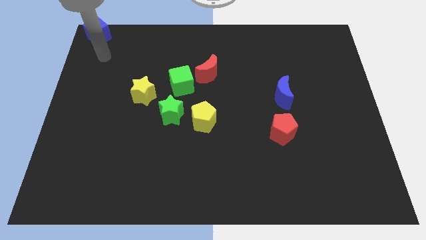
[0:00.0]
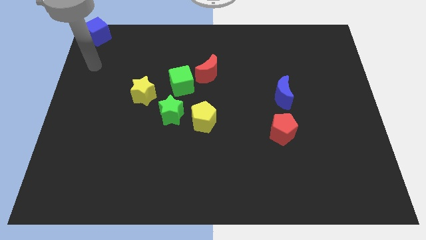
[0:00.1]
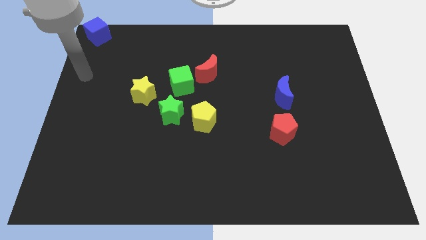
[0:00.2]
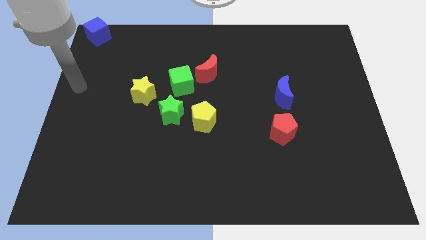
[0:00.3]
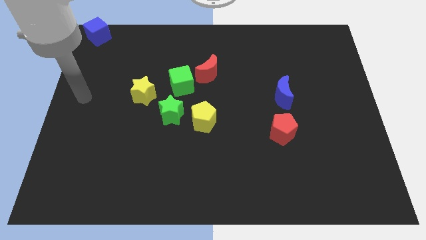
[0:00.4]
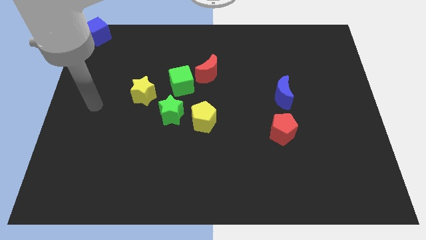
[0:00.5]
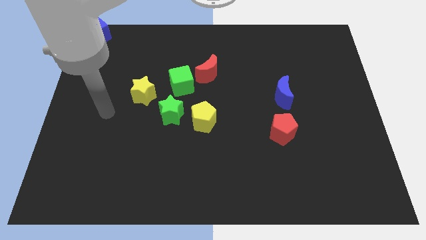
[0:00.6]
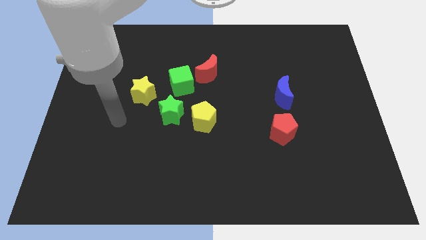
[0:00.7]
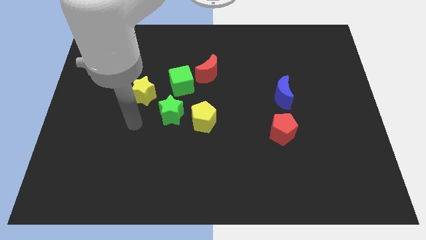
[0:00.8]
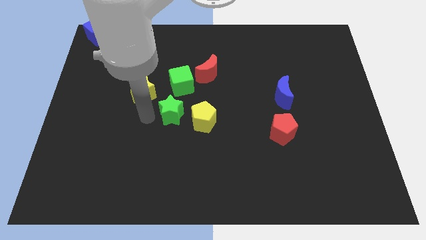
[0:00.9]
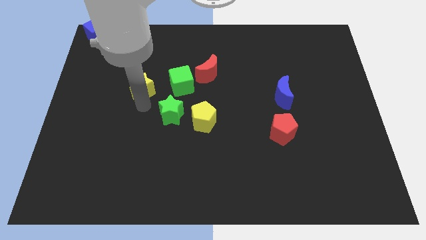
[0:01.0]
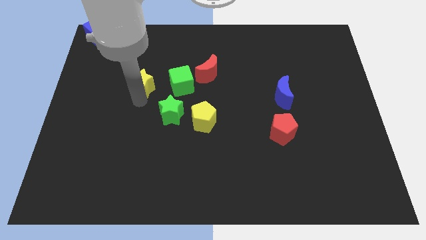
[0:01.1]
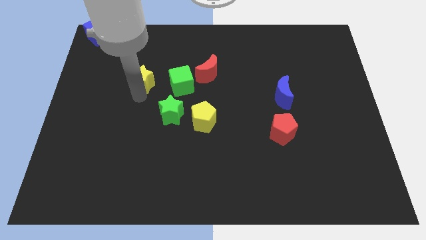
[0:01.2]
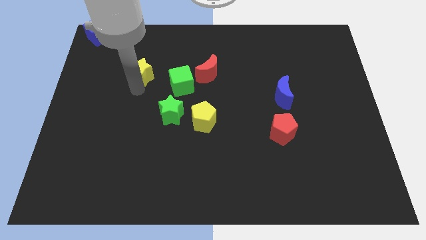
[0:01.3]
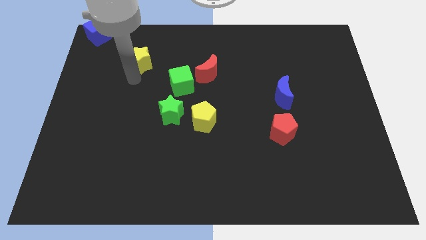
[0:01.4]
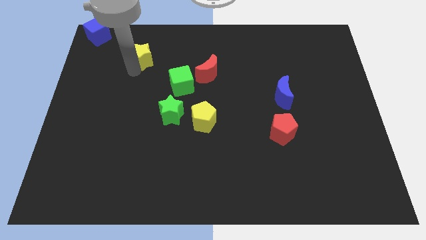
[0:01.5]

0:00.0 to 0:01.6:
move the yellow star towards the blue cube

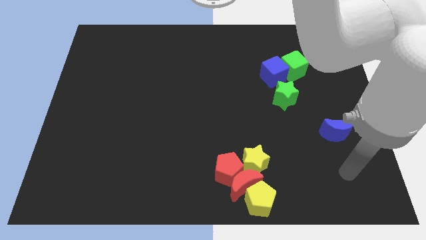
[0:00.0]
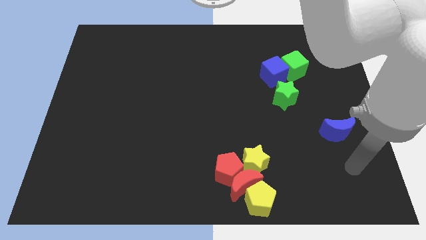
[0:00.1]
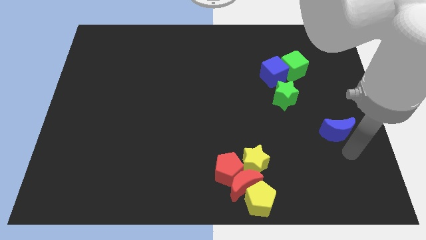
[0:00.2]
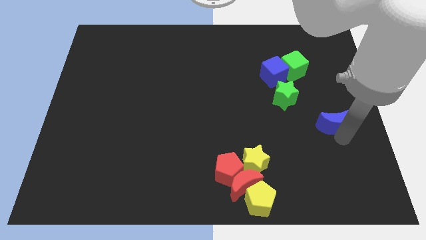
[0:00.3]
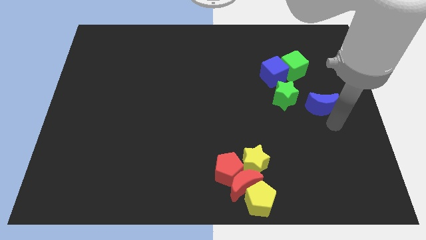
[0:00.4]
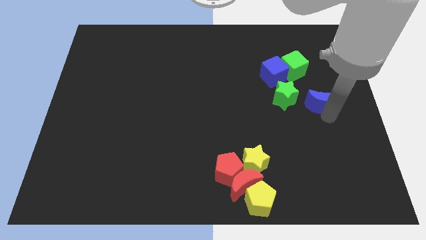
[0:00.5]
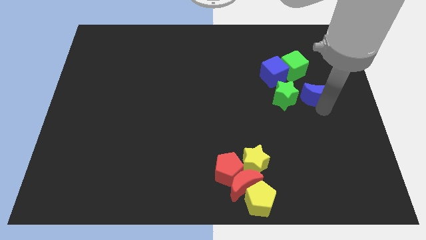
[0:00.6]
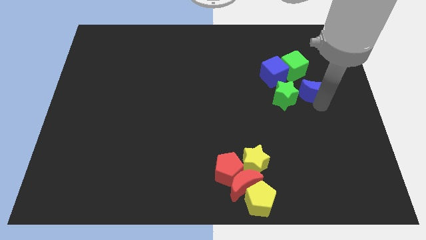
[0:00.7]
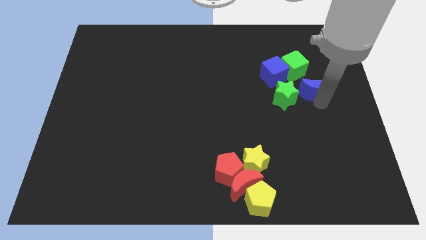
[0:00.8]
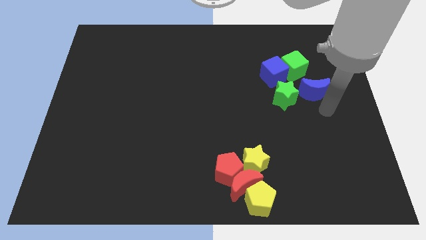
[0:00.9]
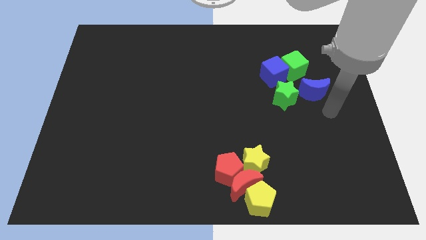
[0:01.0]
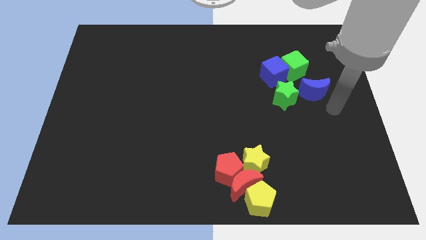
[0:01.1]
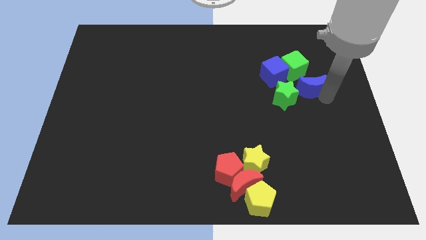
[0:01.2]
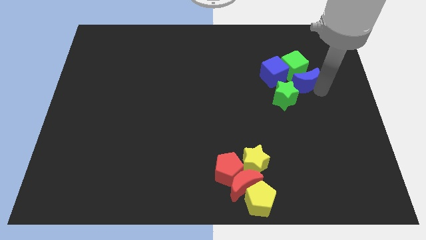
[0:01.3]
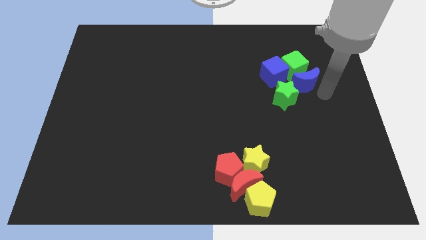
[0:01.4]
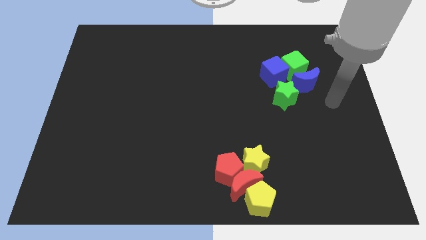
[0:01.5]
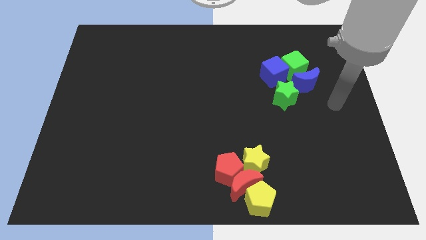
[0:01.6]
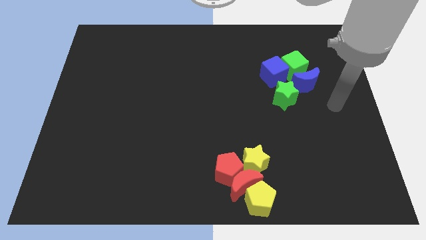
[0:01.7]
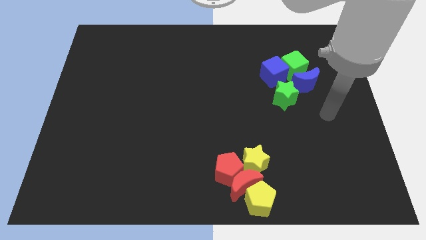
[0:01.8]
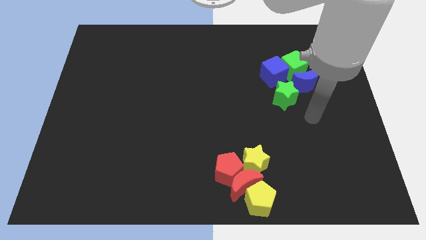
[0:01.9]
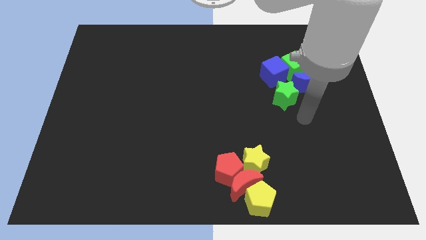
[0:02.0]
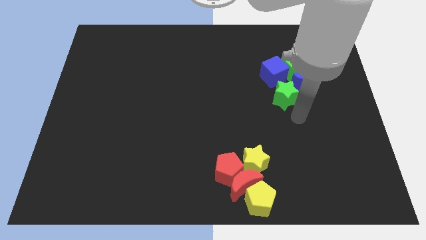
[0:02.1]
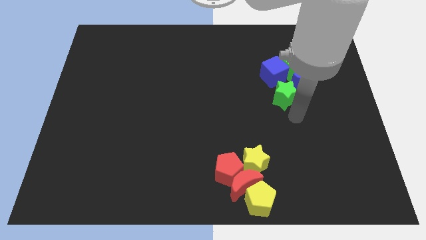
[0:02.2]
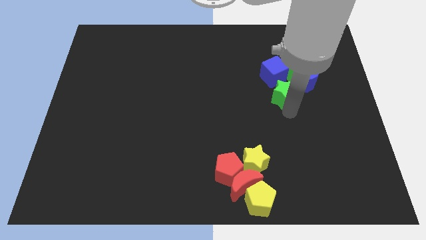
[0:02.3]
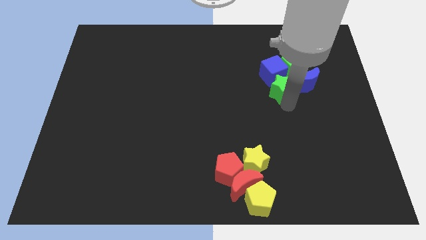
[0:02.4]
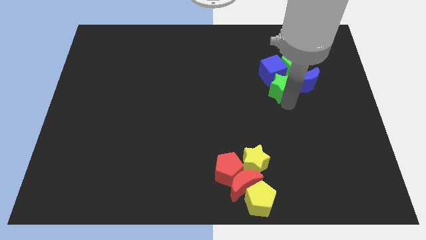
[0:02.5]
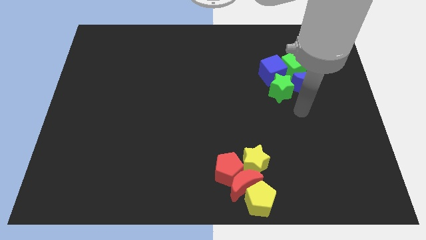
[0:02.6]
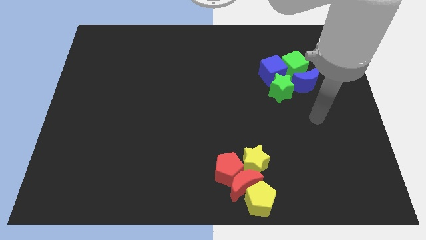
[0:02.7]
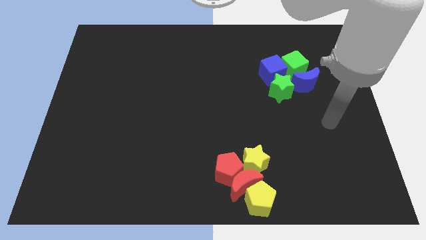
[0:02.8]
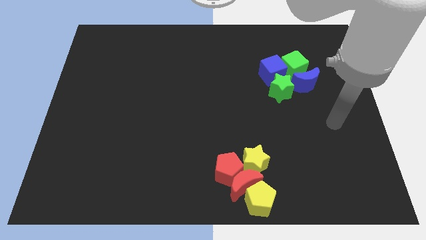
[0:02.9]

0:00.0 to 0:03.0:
make a group of green and blue blocks

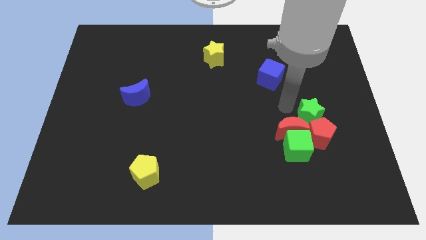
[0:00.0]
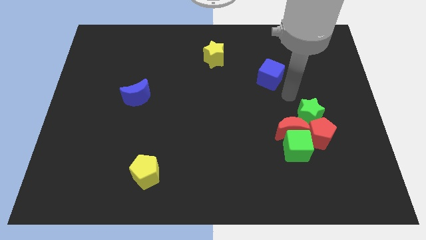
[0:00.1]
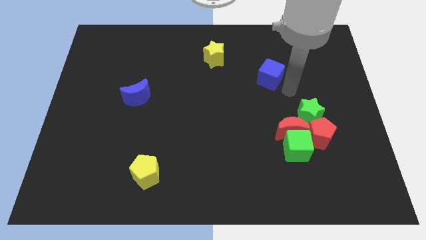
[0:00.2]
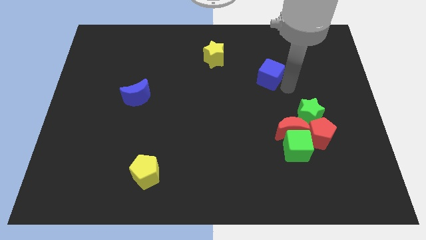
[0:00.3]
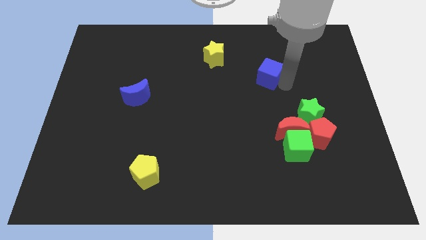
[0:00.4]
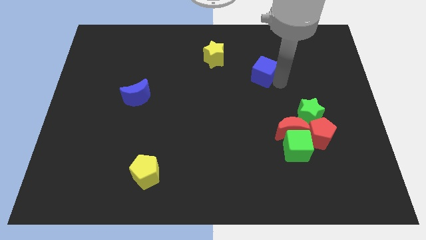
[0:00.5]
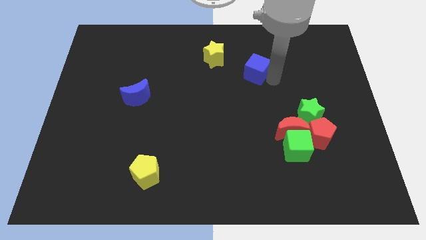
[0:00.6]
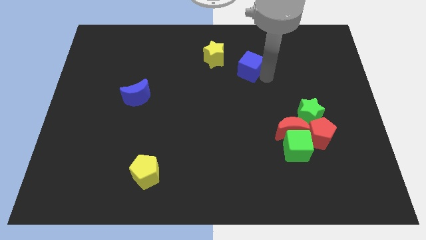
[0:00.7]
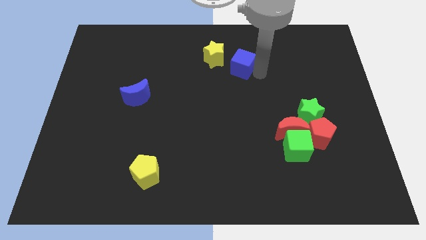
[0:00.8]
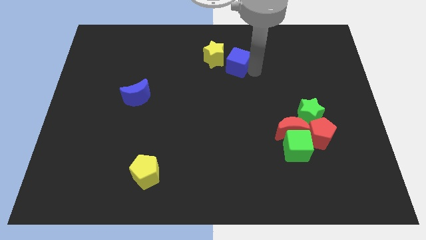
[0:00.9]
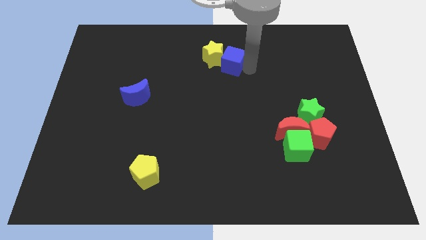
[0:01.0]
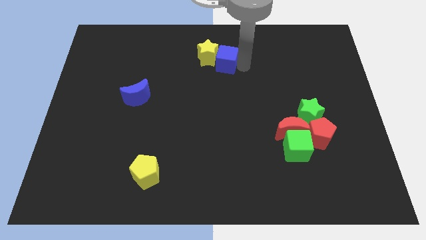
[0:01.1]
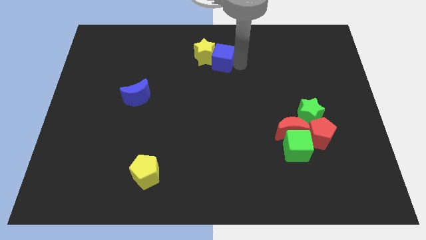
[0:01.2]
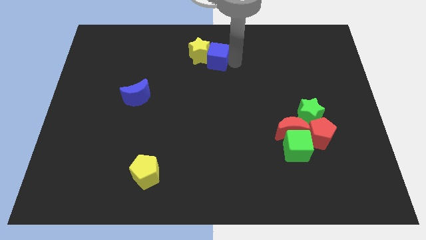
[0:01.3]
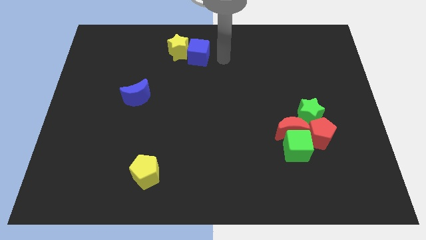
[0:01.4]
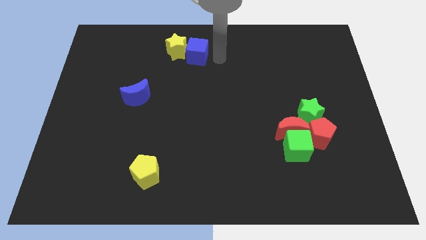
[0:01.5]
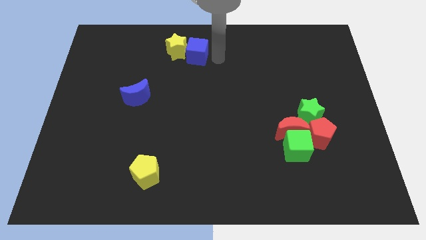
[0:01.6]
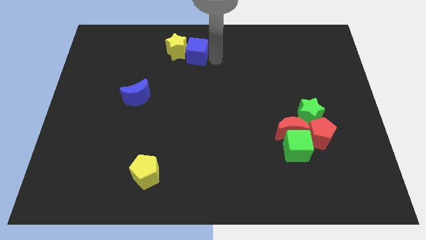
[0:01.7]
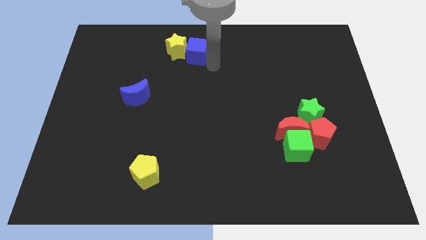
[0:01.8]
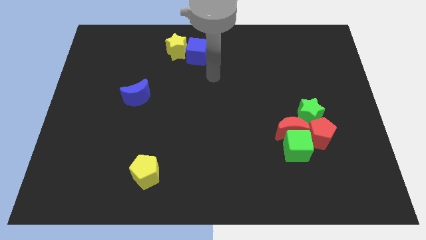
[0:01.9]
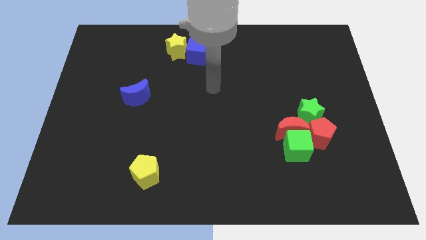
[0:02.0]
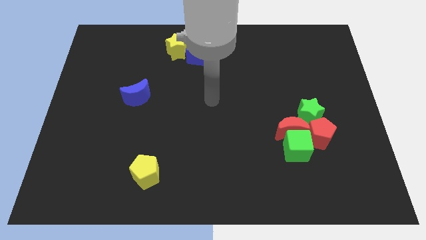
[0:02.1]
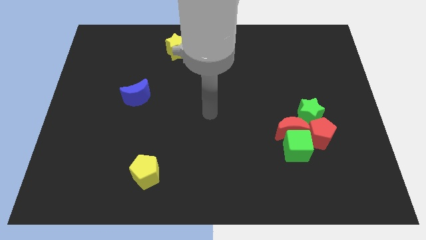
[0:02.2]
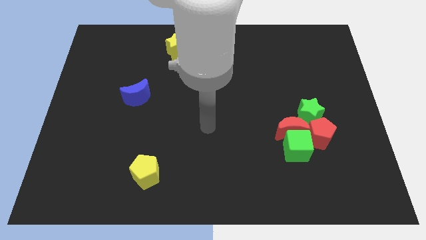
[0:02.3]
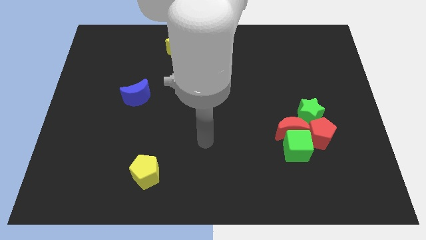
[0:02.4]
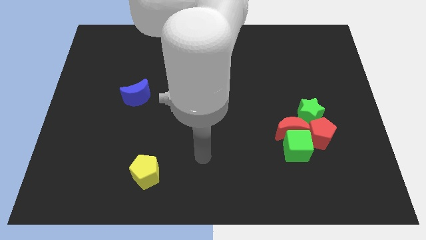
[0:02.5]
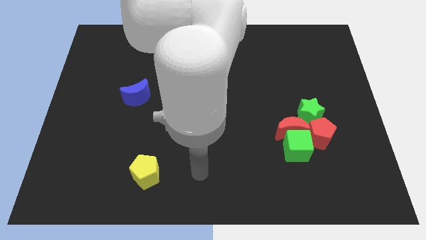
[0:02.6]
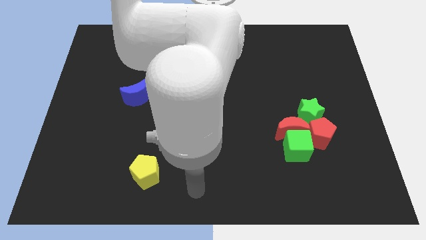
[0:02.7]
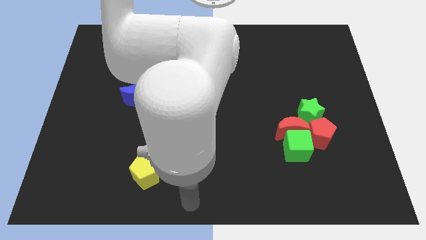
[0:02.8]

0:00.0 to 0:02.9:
push the blue cube to the right of the yellow star

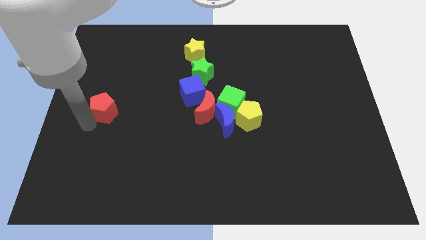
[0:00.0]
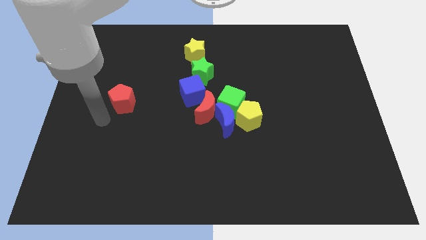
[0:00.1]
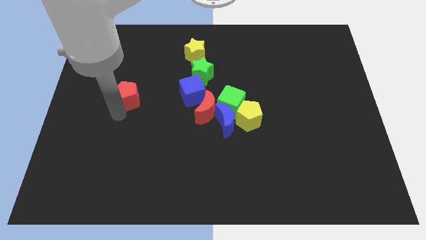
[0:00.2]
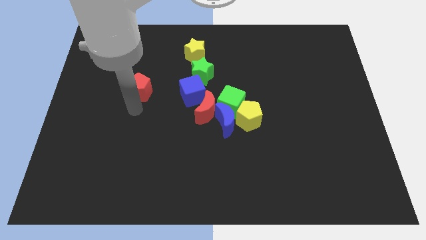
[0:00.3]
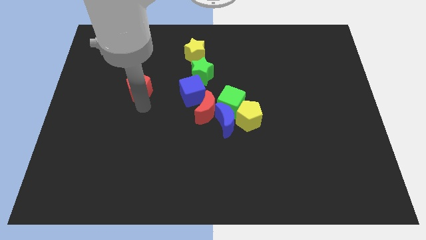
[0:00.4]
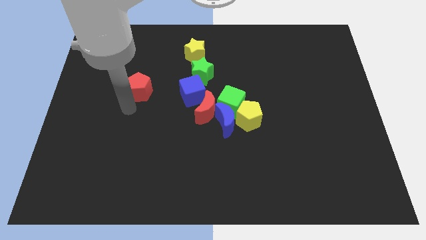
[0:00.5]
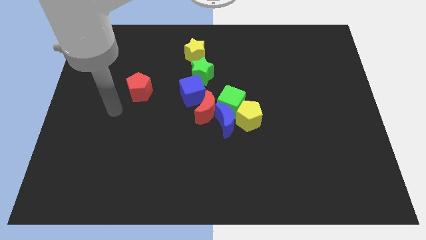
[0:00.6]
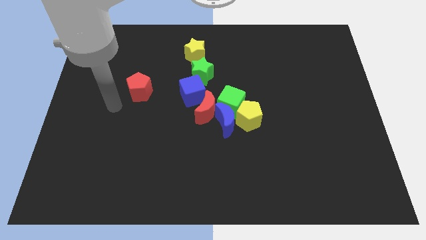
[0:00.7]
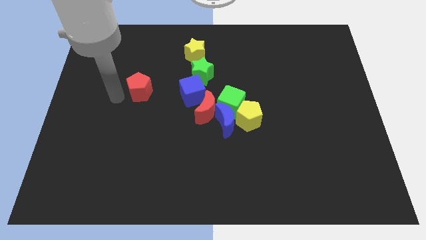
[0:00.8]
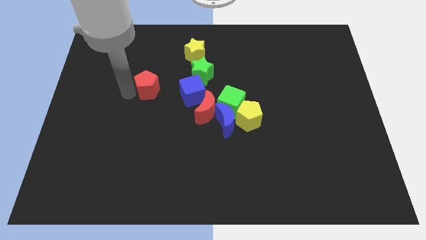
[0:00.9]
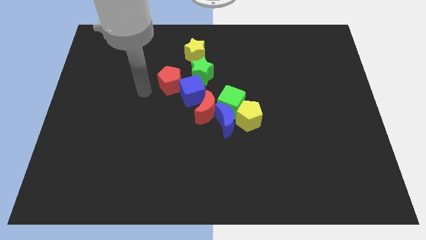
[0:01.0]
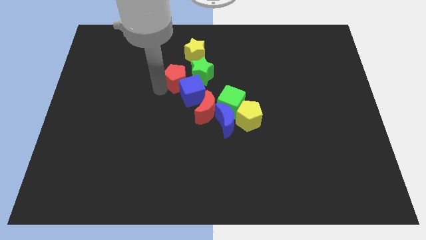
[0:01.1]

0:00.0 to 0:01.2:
move the red pentagon slightly upwards to the green star

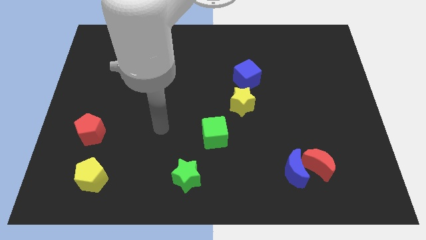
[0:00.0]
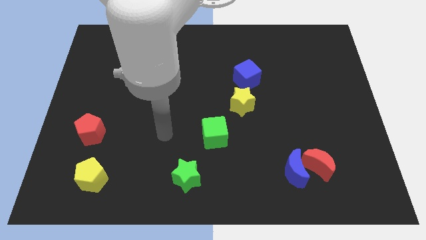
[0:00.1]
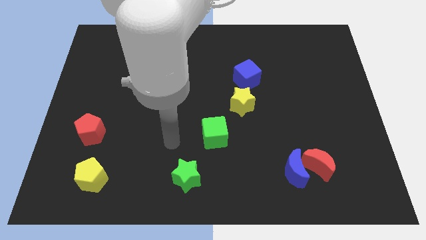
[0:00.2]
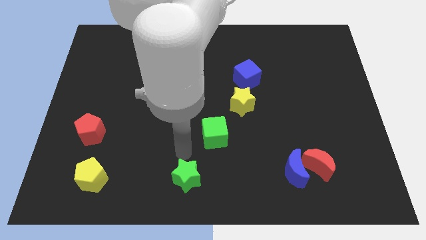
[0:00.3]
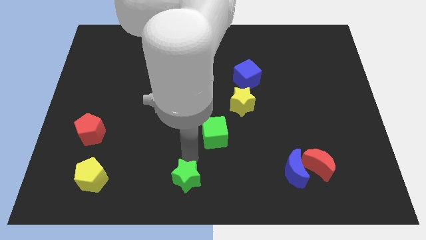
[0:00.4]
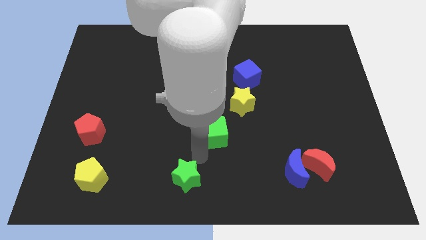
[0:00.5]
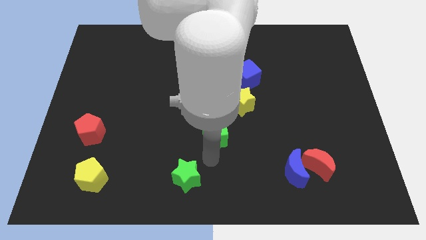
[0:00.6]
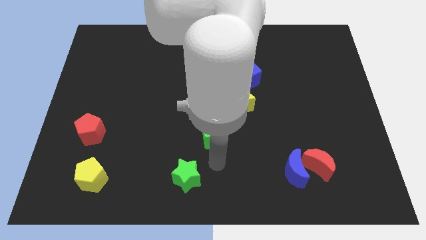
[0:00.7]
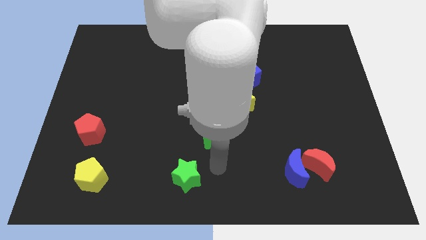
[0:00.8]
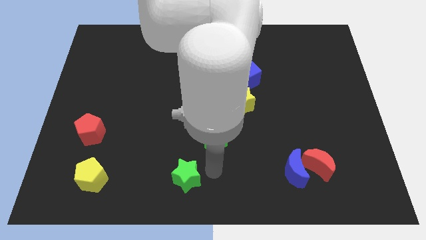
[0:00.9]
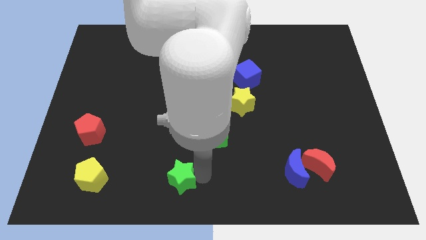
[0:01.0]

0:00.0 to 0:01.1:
move the arm towards the green star
